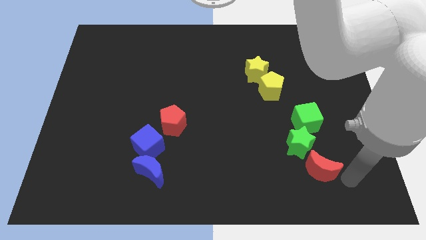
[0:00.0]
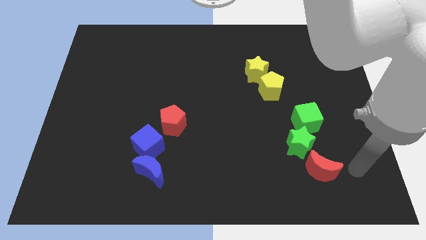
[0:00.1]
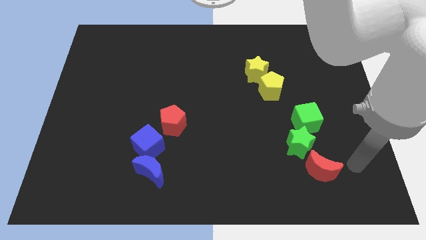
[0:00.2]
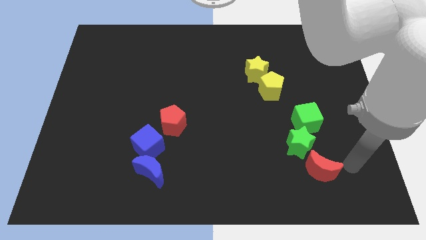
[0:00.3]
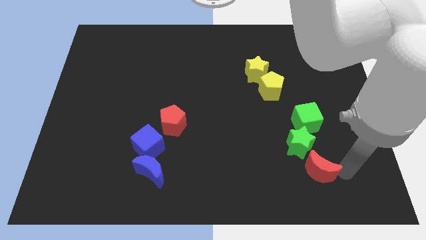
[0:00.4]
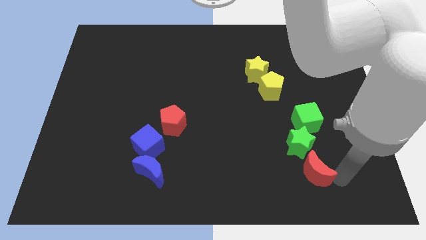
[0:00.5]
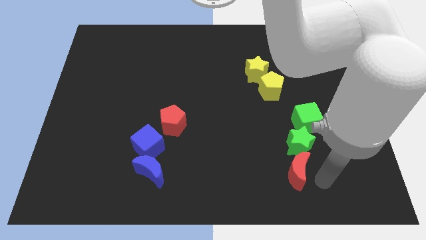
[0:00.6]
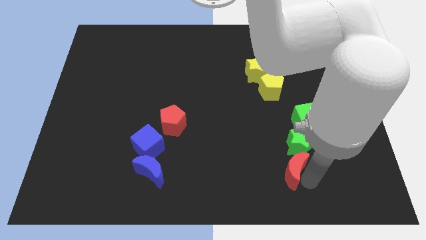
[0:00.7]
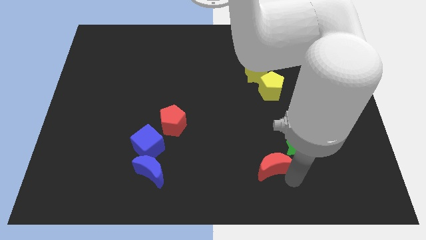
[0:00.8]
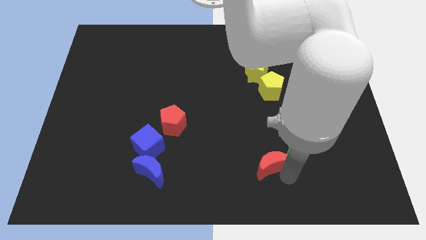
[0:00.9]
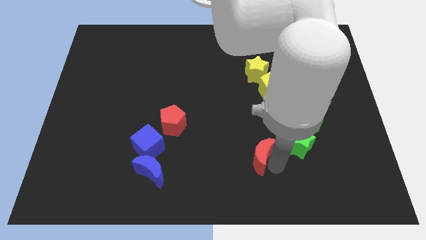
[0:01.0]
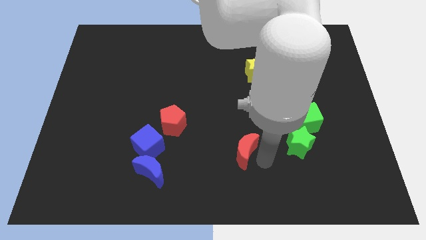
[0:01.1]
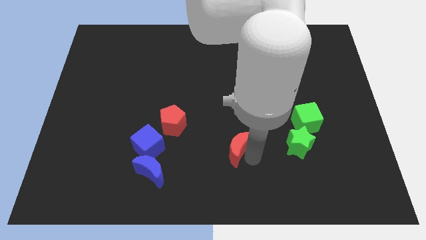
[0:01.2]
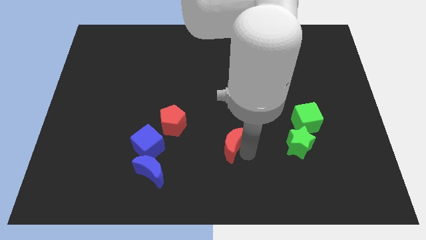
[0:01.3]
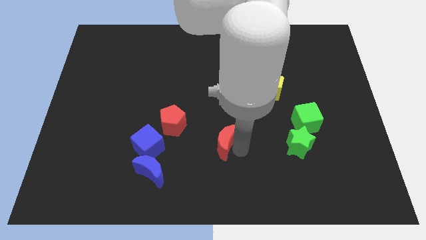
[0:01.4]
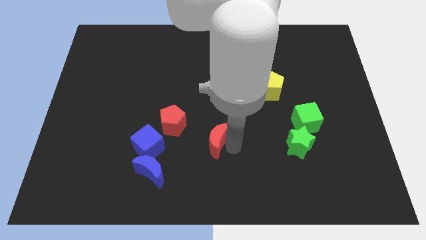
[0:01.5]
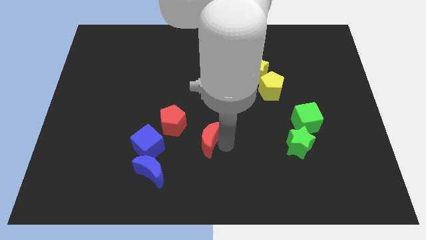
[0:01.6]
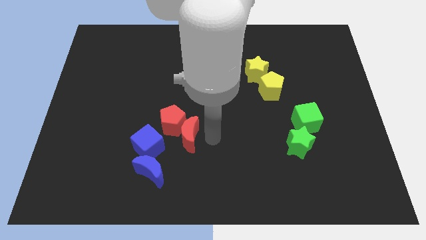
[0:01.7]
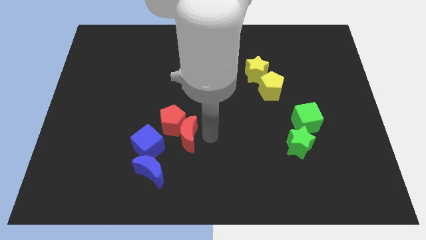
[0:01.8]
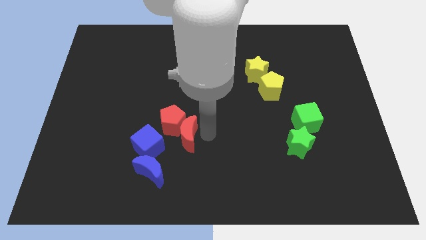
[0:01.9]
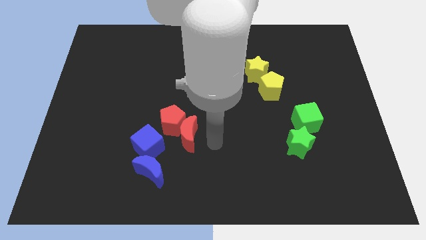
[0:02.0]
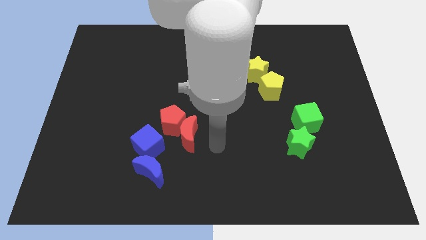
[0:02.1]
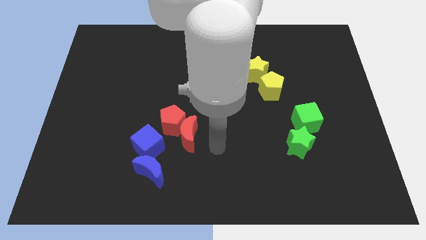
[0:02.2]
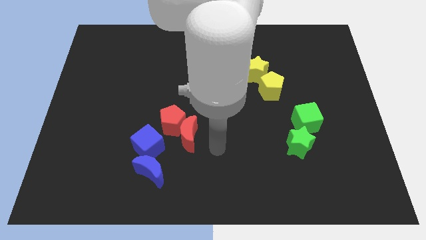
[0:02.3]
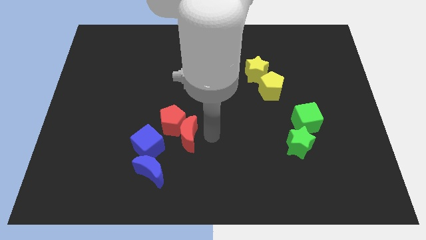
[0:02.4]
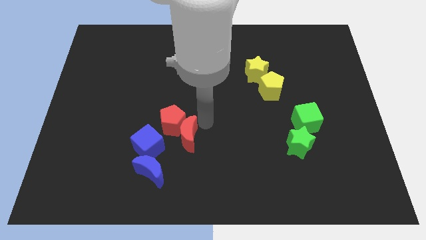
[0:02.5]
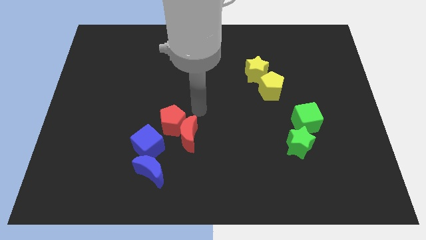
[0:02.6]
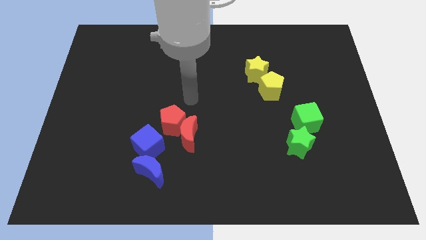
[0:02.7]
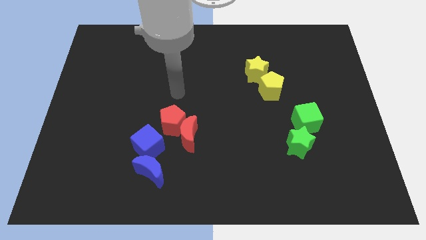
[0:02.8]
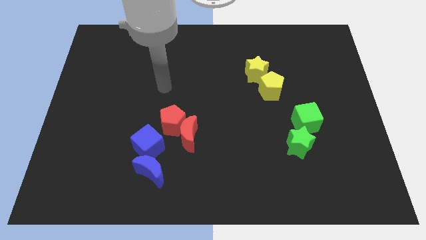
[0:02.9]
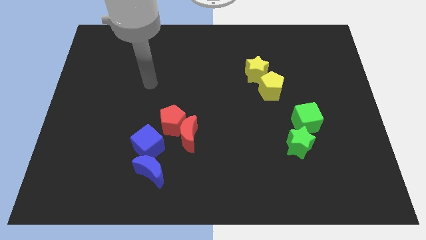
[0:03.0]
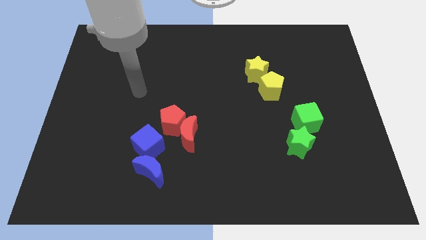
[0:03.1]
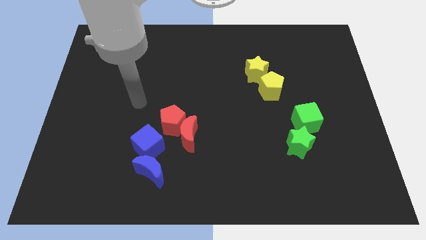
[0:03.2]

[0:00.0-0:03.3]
push the red crescent to the right of the red pentagon

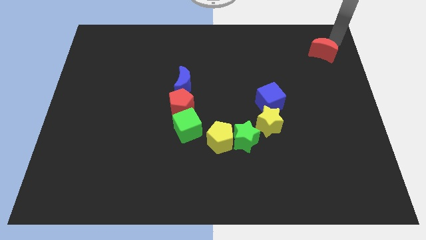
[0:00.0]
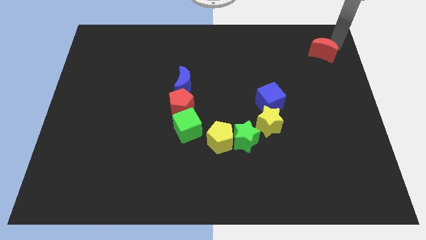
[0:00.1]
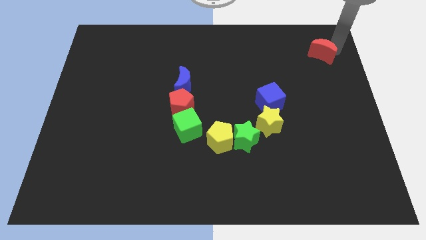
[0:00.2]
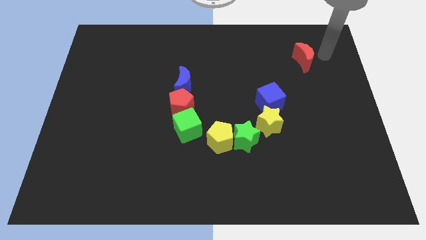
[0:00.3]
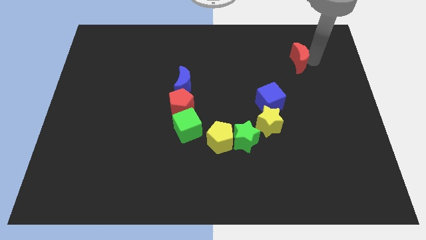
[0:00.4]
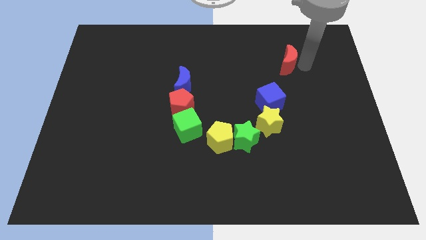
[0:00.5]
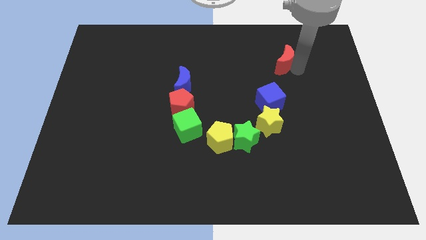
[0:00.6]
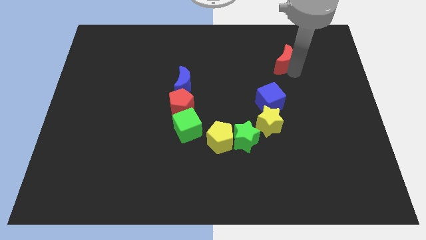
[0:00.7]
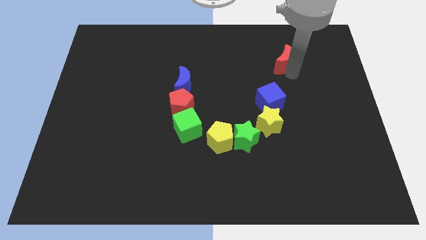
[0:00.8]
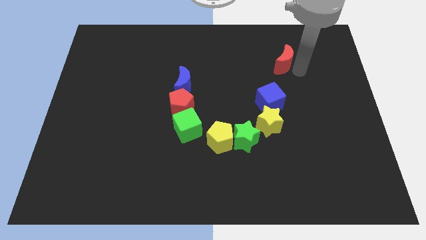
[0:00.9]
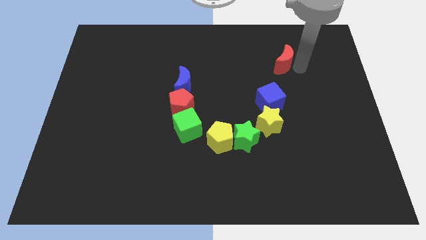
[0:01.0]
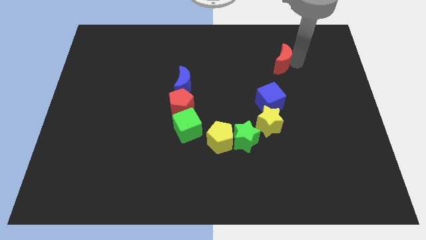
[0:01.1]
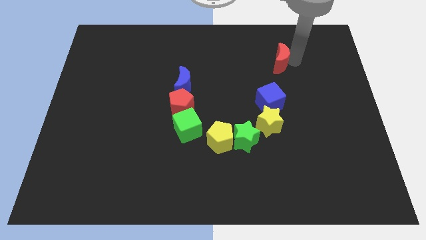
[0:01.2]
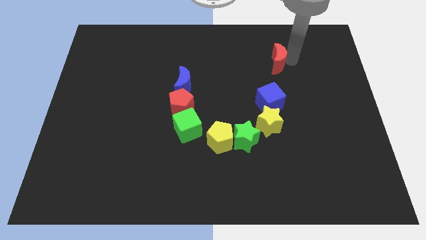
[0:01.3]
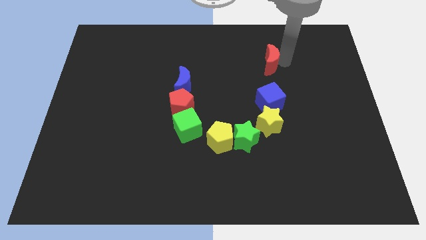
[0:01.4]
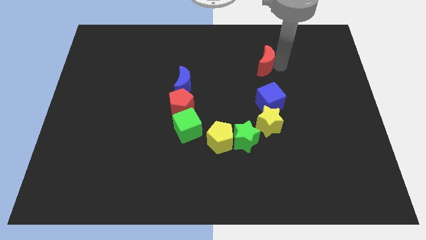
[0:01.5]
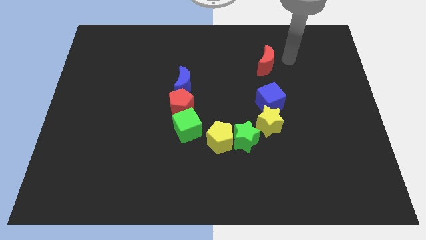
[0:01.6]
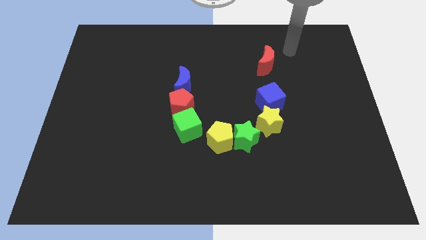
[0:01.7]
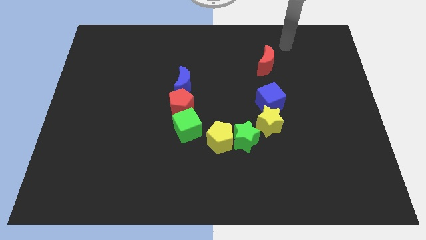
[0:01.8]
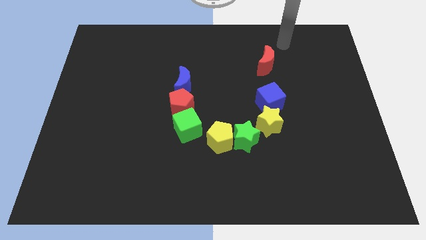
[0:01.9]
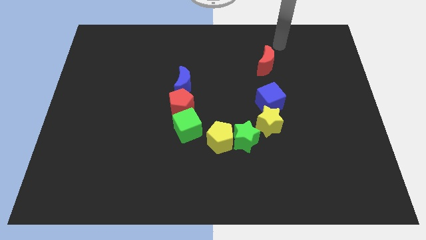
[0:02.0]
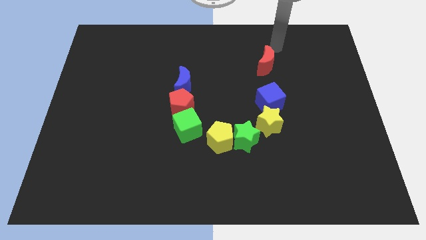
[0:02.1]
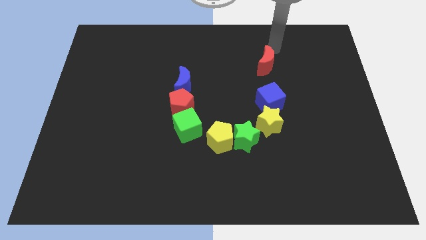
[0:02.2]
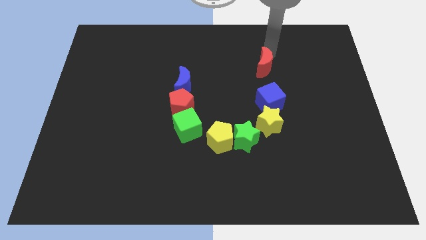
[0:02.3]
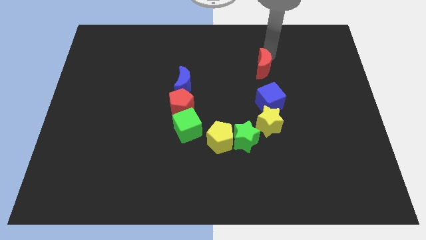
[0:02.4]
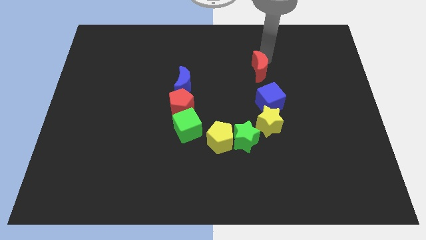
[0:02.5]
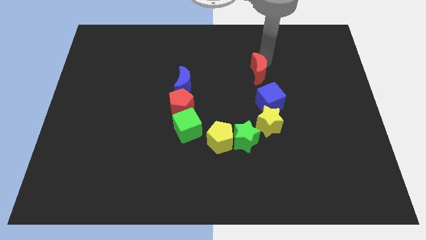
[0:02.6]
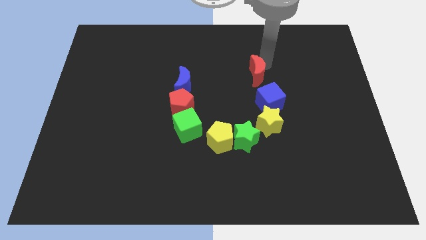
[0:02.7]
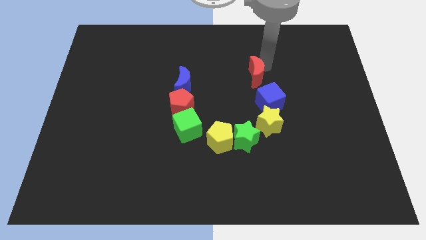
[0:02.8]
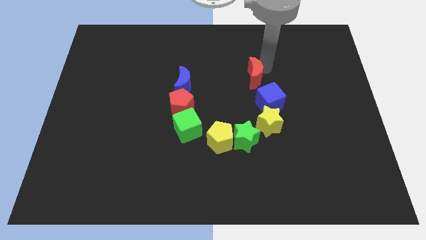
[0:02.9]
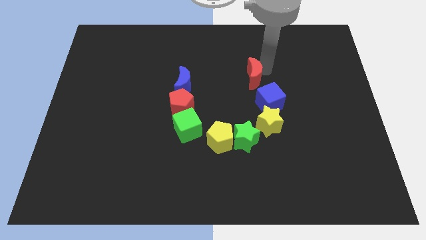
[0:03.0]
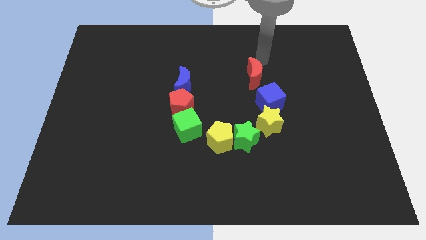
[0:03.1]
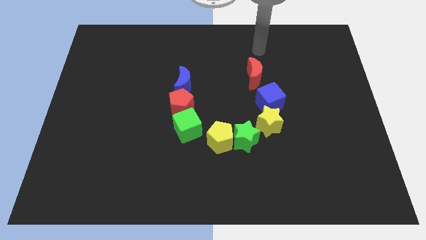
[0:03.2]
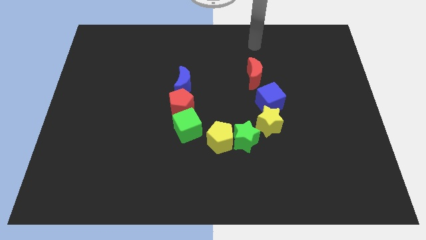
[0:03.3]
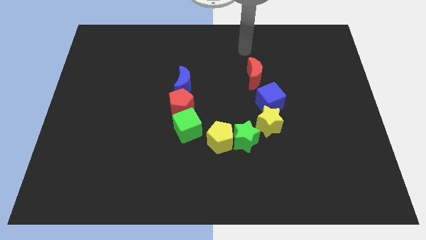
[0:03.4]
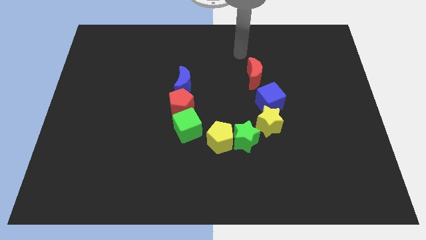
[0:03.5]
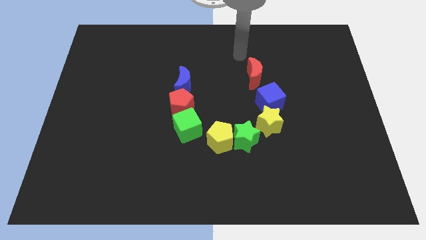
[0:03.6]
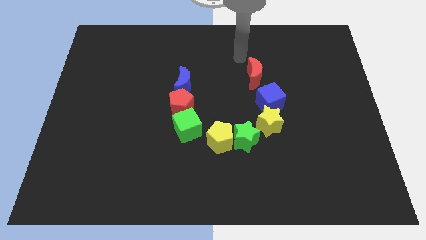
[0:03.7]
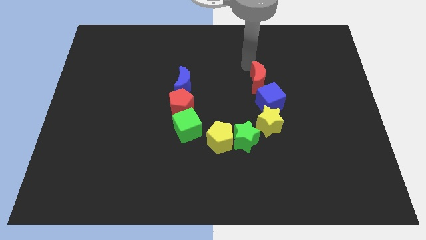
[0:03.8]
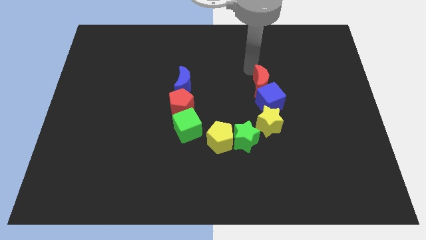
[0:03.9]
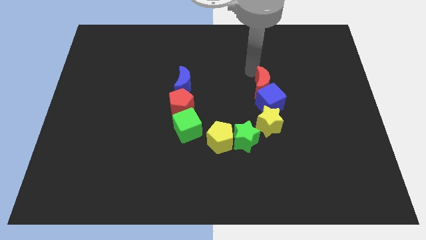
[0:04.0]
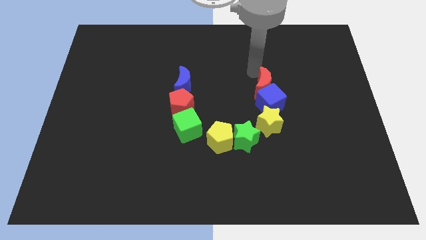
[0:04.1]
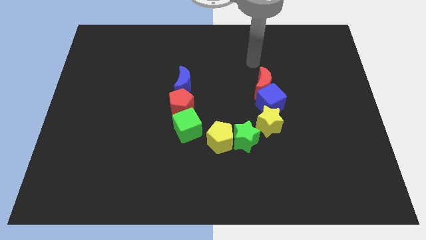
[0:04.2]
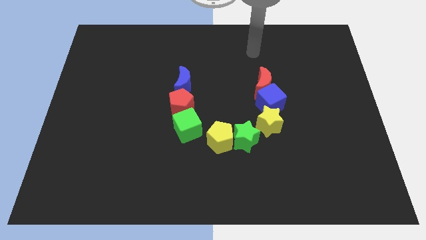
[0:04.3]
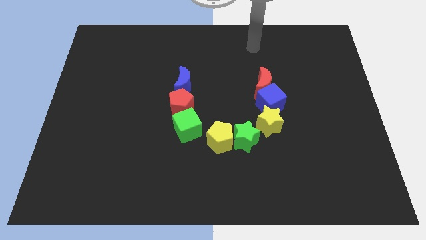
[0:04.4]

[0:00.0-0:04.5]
drag red moon above blue cube

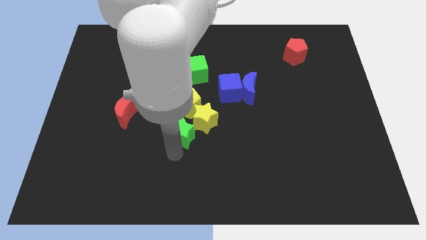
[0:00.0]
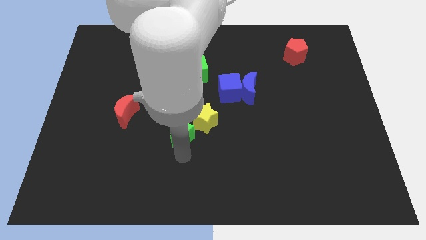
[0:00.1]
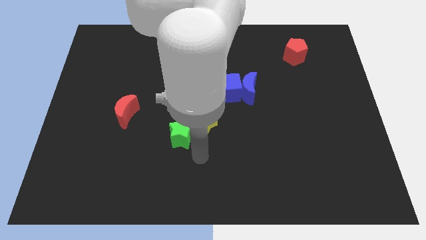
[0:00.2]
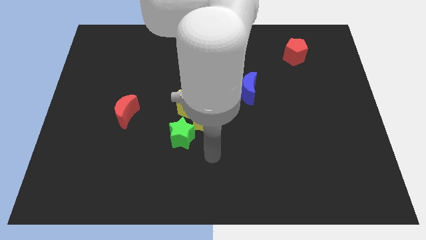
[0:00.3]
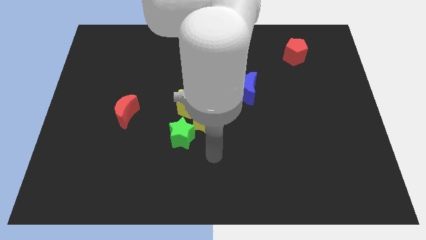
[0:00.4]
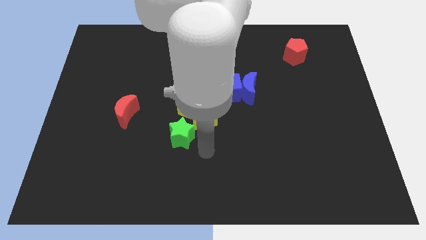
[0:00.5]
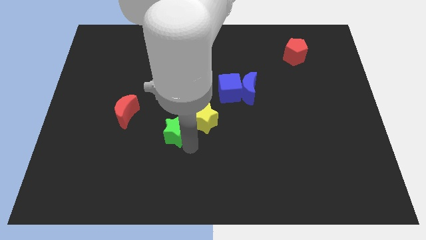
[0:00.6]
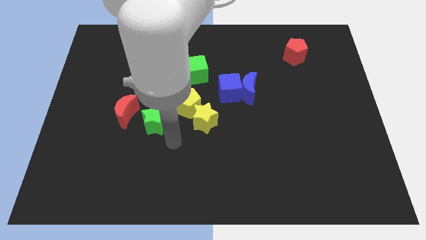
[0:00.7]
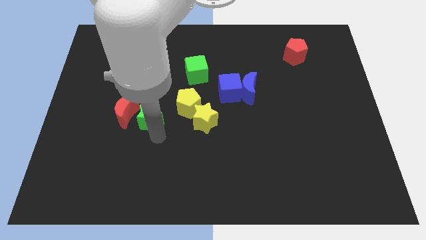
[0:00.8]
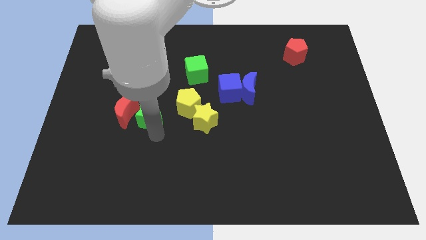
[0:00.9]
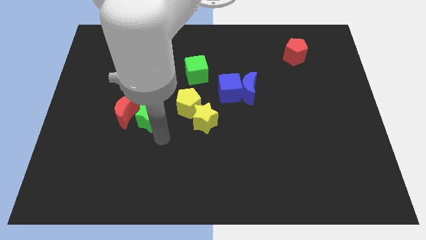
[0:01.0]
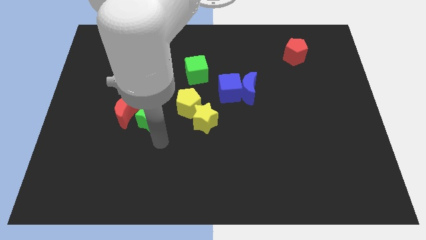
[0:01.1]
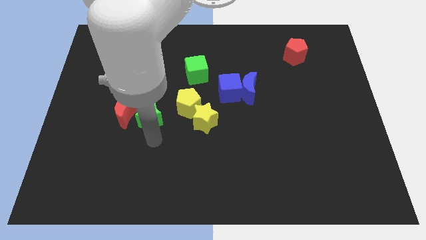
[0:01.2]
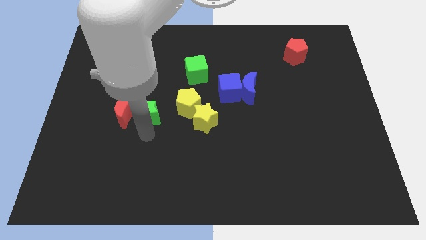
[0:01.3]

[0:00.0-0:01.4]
place the green star right to the red moon
